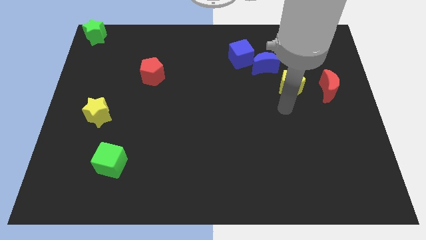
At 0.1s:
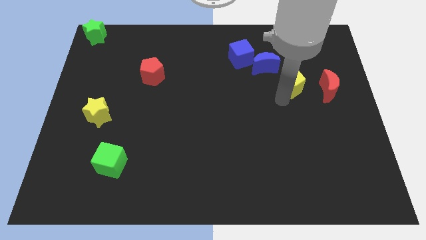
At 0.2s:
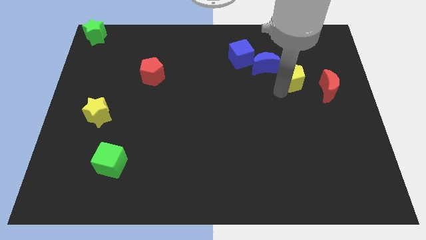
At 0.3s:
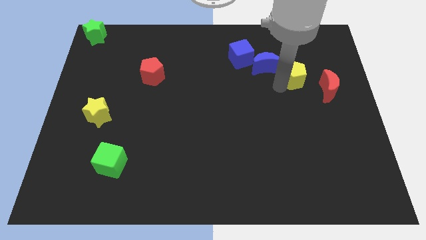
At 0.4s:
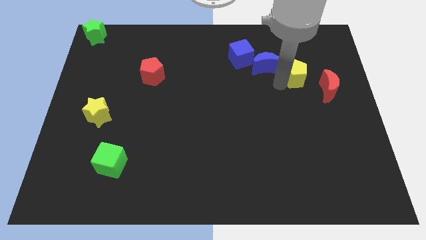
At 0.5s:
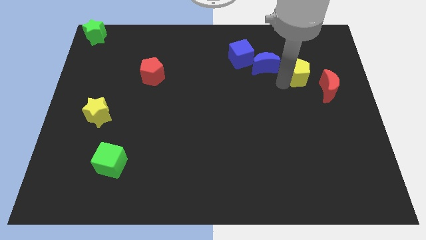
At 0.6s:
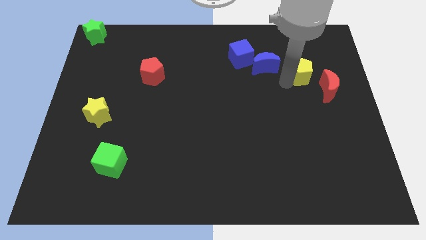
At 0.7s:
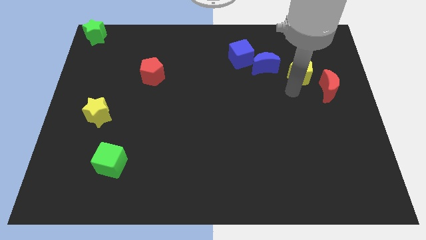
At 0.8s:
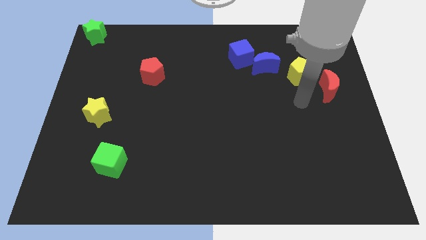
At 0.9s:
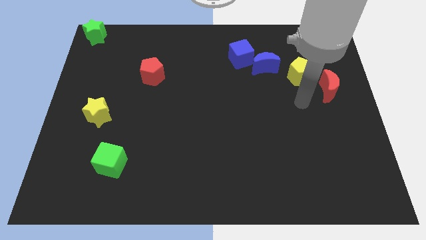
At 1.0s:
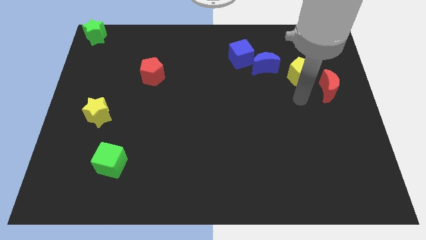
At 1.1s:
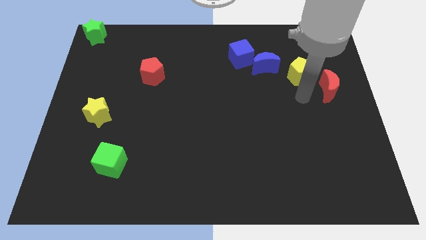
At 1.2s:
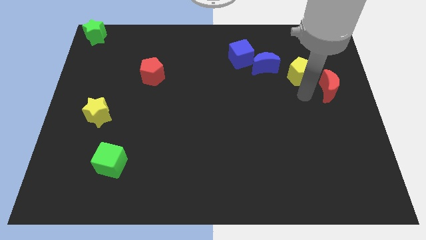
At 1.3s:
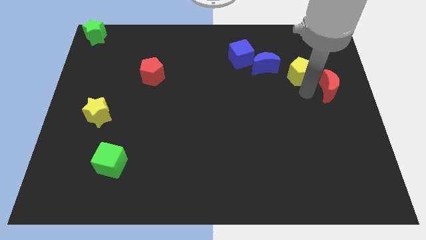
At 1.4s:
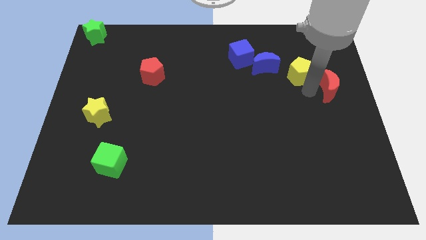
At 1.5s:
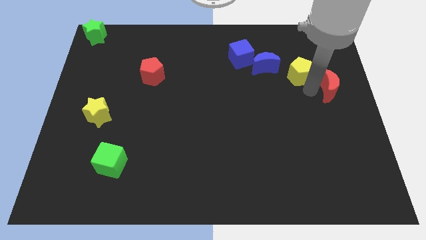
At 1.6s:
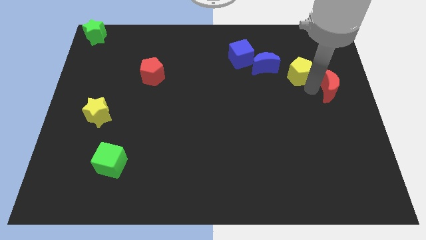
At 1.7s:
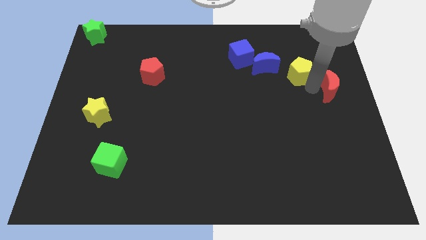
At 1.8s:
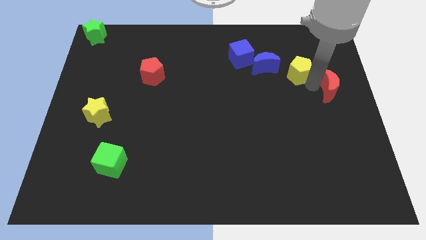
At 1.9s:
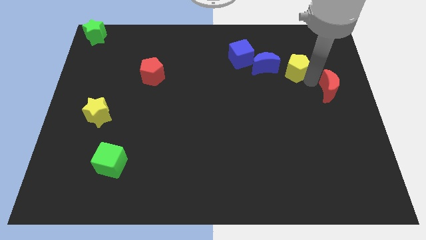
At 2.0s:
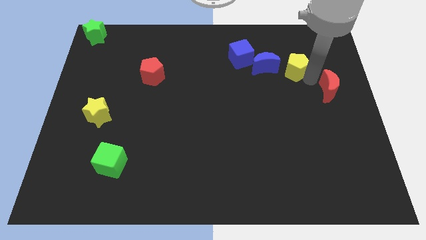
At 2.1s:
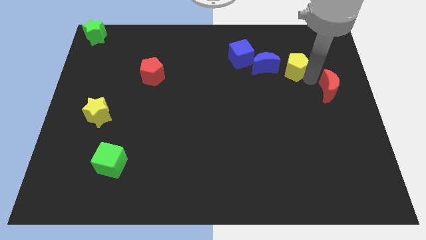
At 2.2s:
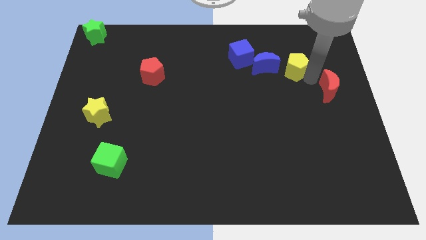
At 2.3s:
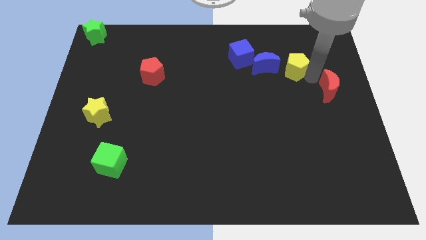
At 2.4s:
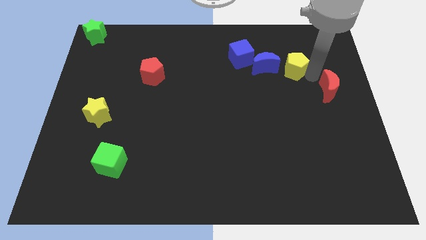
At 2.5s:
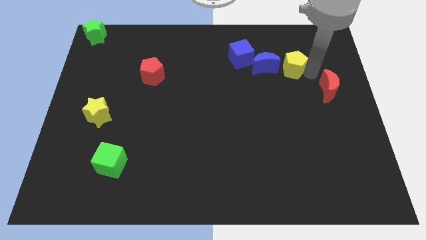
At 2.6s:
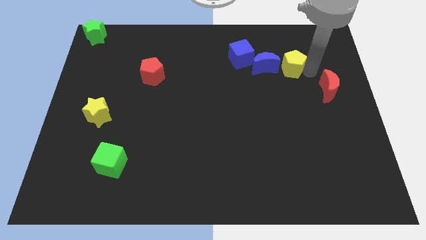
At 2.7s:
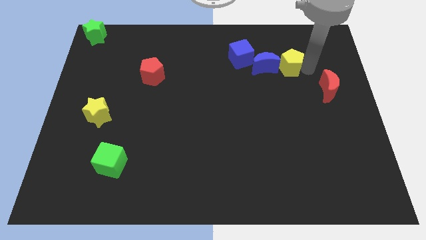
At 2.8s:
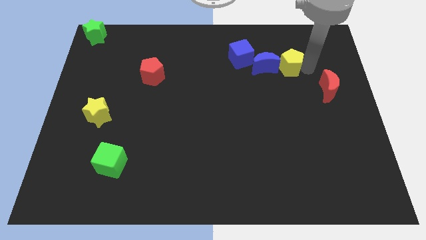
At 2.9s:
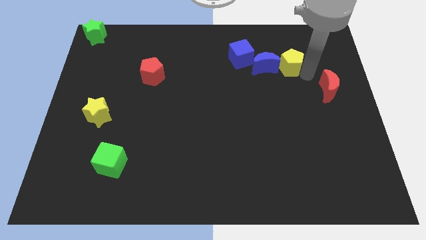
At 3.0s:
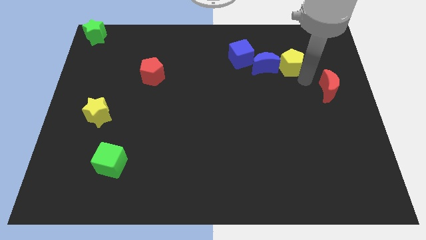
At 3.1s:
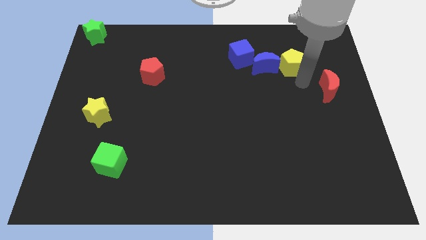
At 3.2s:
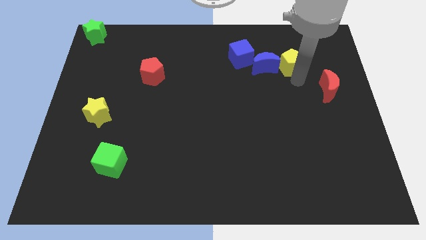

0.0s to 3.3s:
move the yellow pentagon to the right side of the blue moon

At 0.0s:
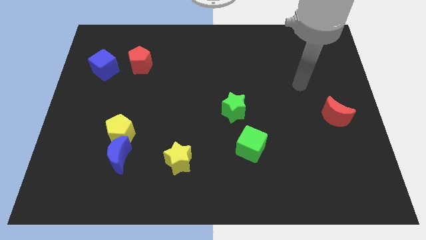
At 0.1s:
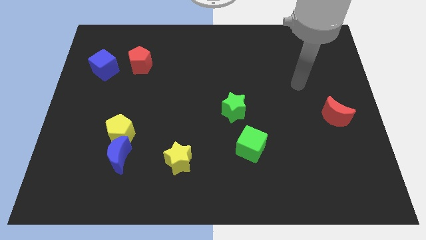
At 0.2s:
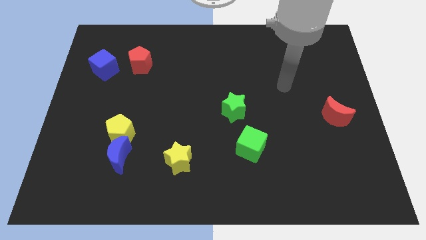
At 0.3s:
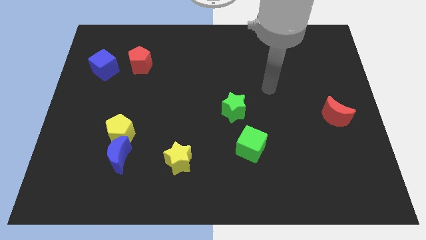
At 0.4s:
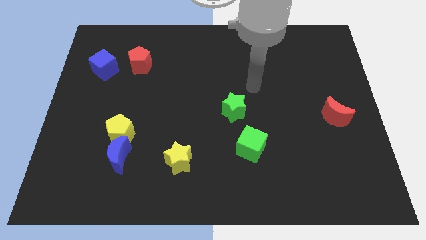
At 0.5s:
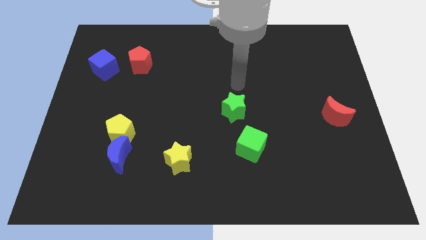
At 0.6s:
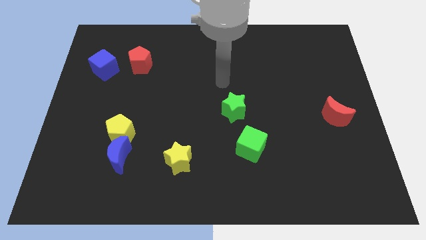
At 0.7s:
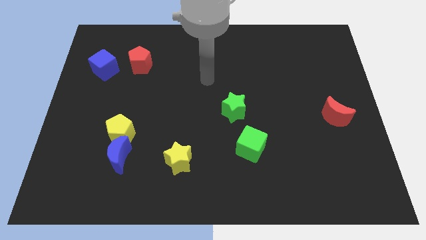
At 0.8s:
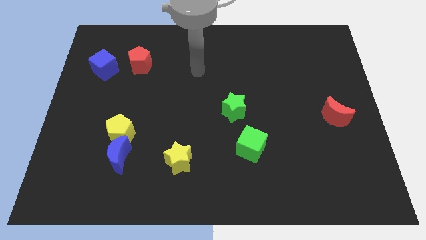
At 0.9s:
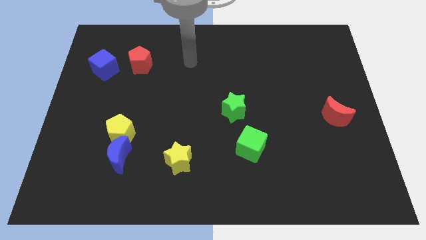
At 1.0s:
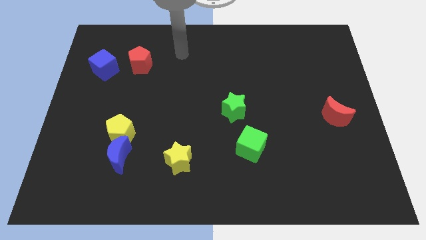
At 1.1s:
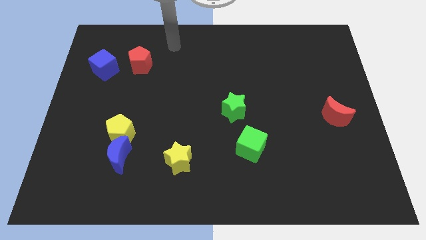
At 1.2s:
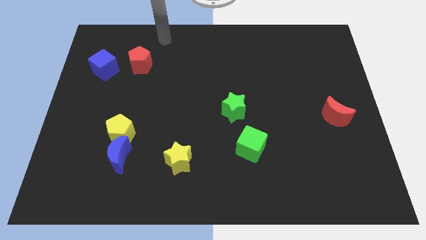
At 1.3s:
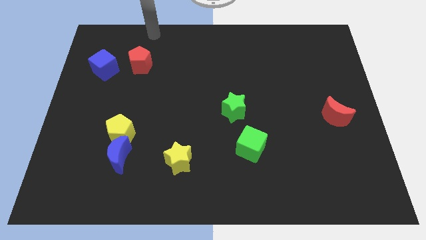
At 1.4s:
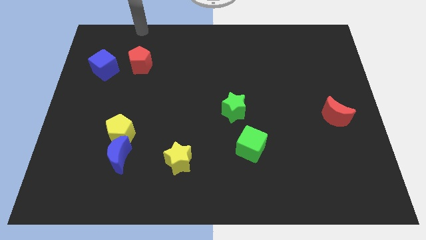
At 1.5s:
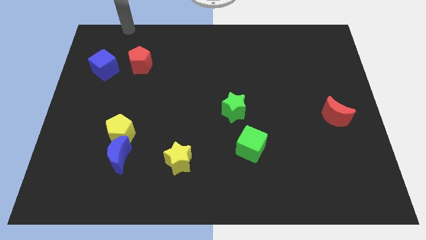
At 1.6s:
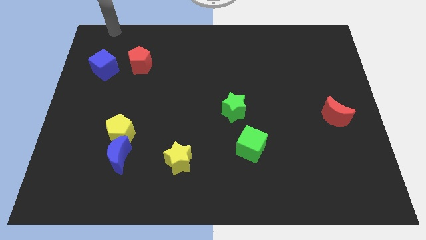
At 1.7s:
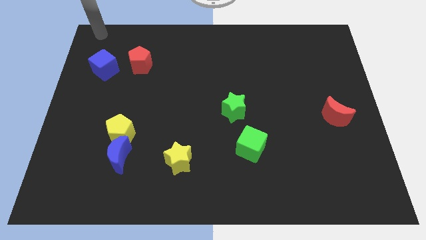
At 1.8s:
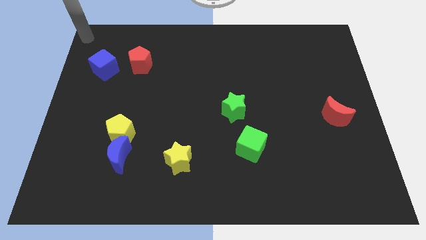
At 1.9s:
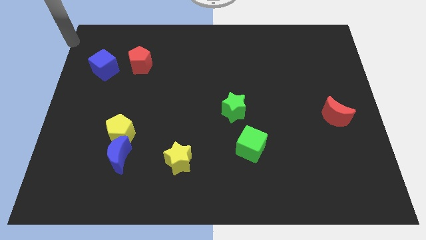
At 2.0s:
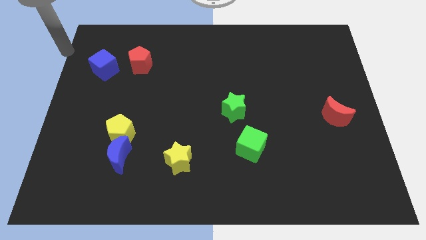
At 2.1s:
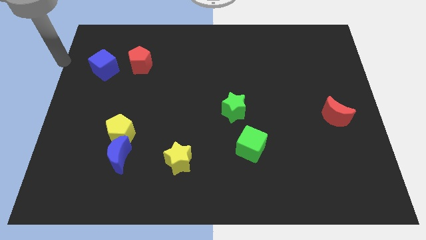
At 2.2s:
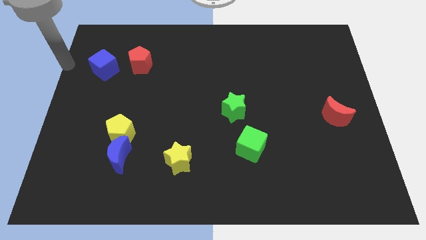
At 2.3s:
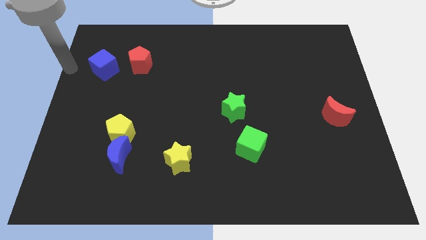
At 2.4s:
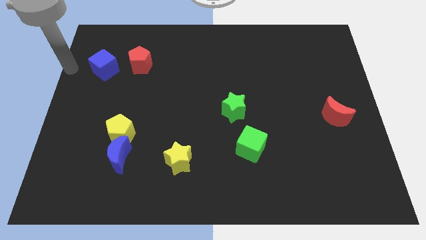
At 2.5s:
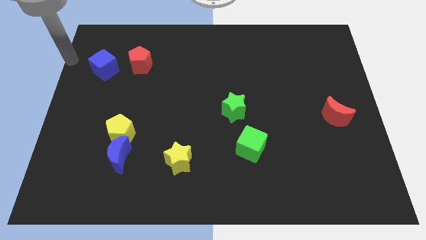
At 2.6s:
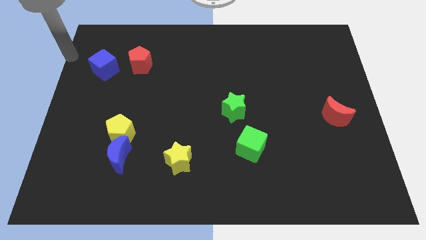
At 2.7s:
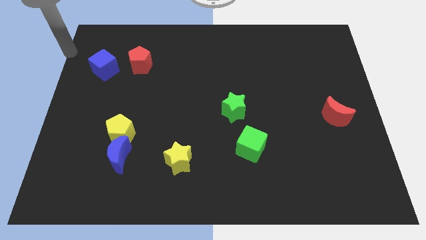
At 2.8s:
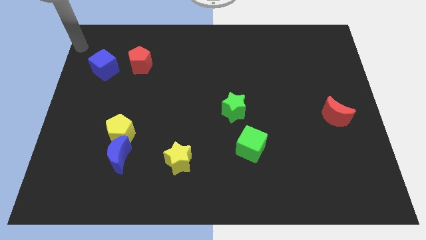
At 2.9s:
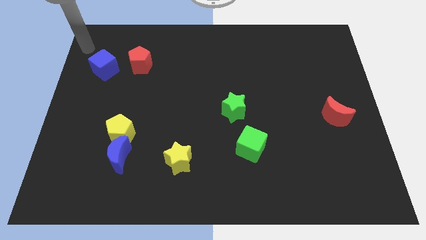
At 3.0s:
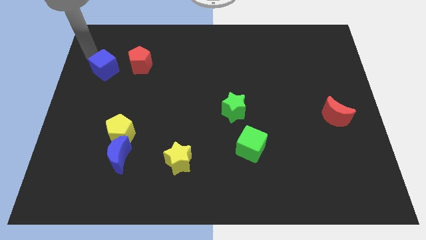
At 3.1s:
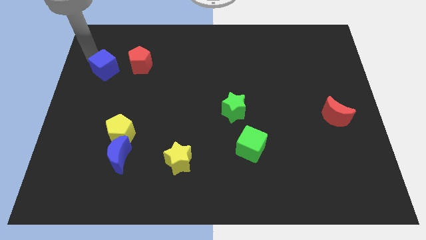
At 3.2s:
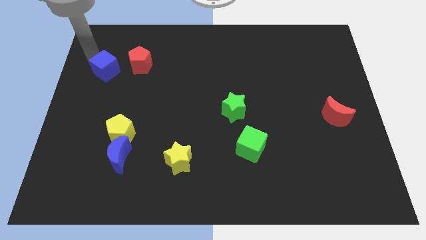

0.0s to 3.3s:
move the arm to the top left

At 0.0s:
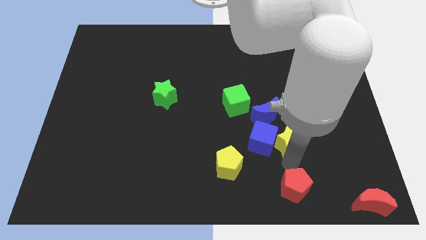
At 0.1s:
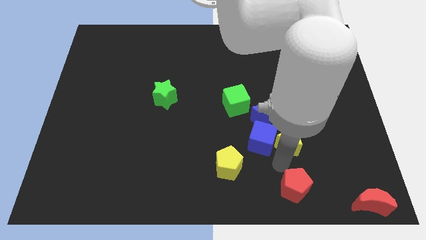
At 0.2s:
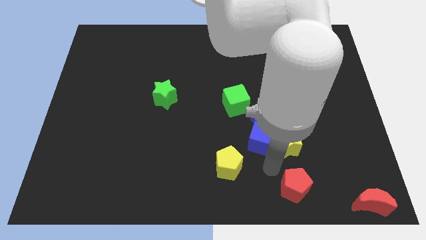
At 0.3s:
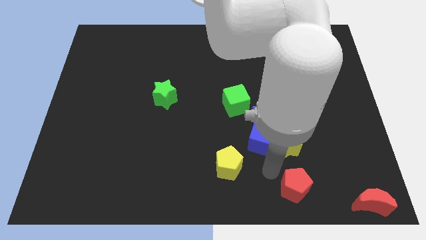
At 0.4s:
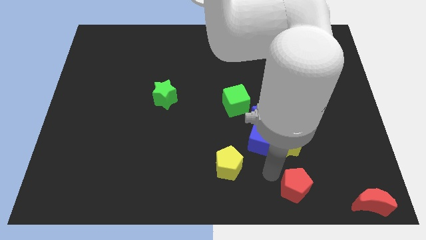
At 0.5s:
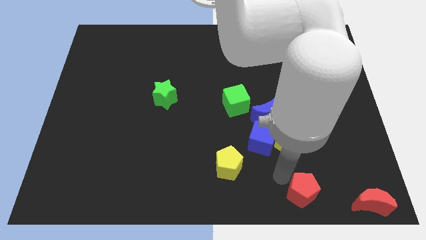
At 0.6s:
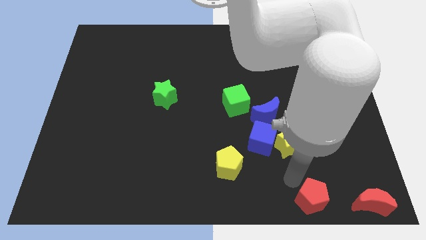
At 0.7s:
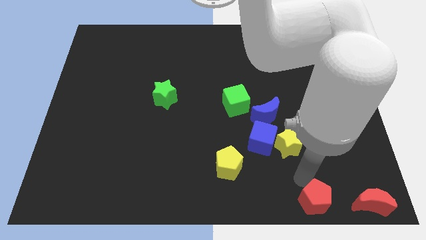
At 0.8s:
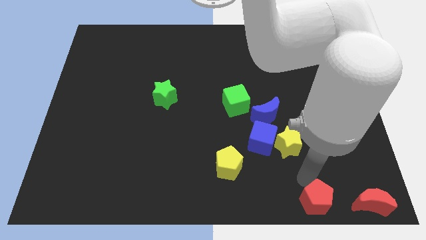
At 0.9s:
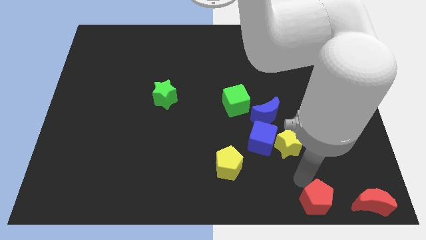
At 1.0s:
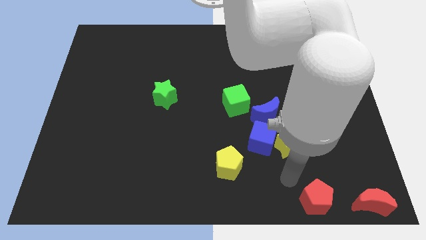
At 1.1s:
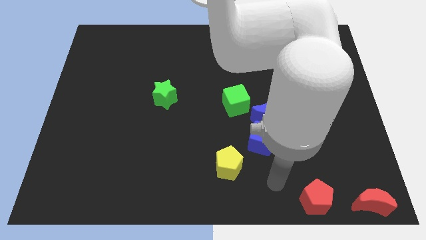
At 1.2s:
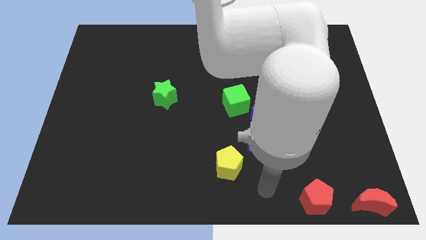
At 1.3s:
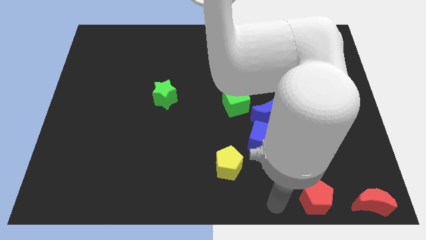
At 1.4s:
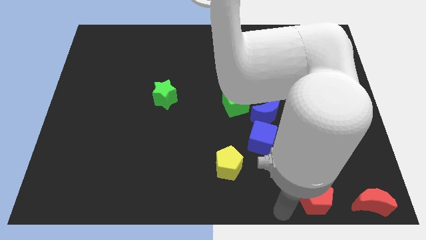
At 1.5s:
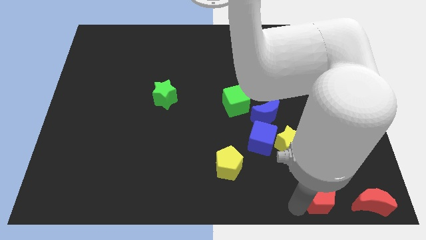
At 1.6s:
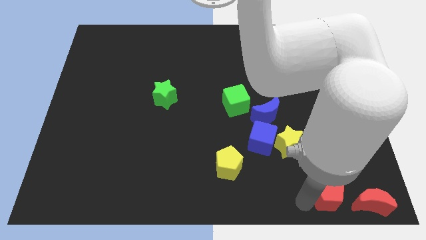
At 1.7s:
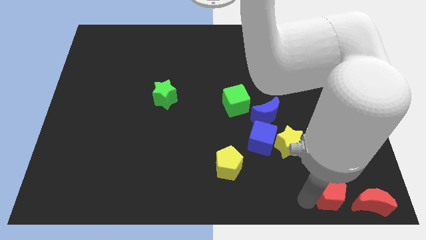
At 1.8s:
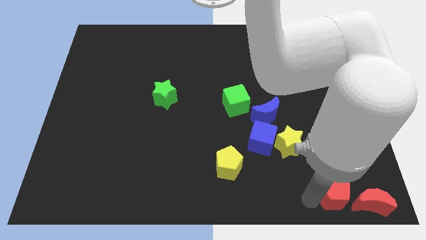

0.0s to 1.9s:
move the red pentagon towards the red moon

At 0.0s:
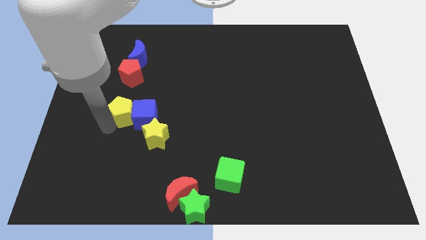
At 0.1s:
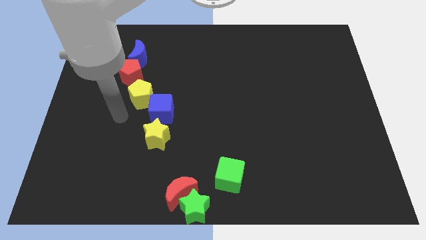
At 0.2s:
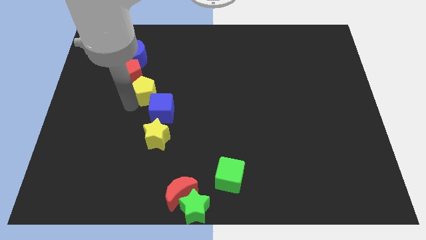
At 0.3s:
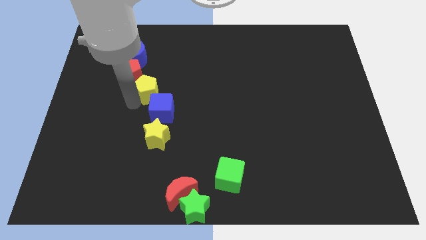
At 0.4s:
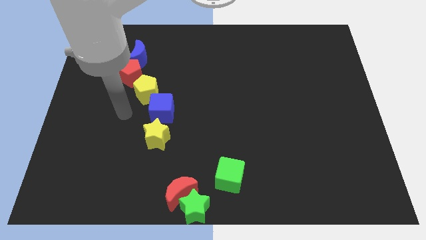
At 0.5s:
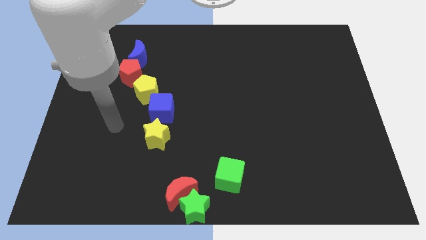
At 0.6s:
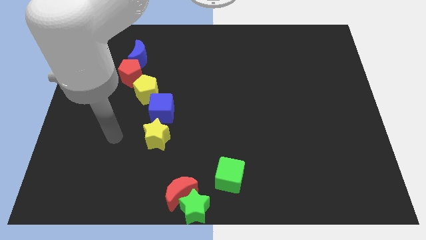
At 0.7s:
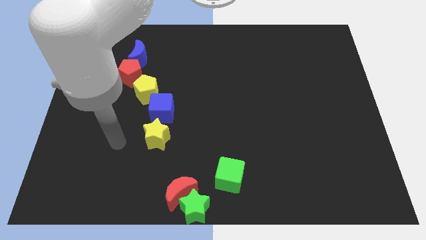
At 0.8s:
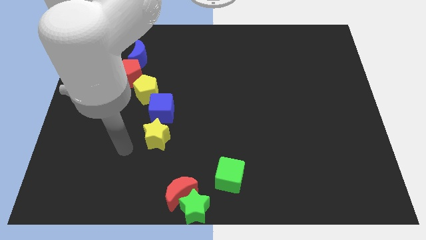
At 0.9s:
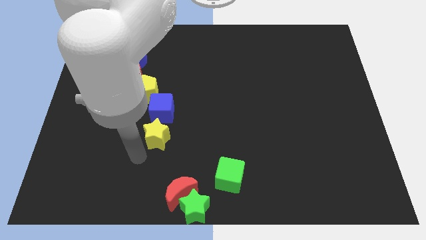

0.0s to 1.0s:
place the yellow pentagon in between the blue cube and the red pentagon
